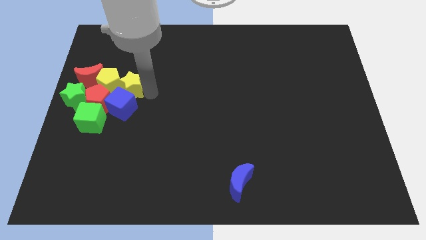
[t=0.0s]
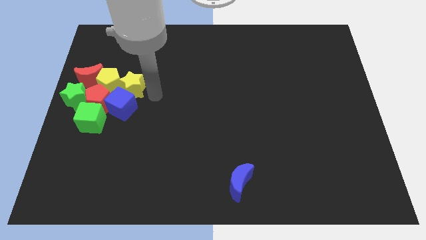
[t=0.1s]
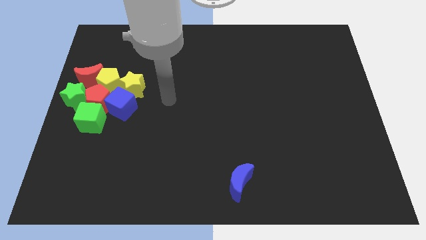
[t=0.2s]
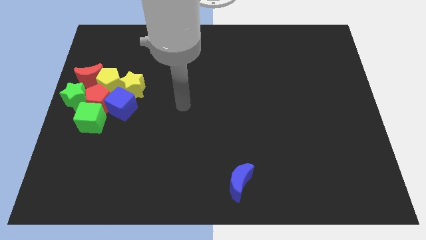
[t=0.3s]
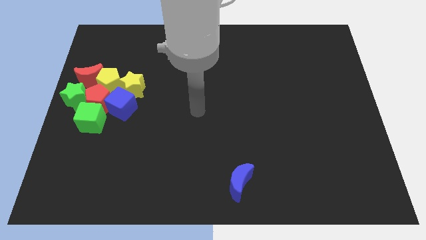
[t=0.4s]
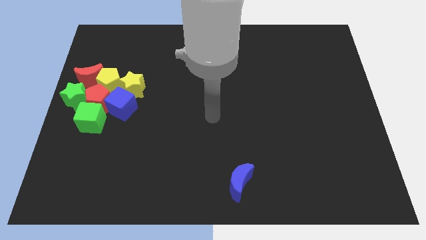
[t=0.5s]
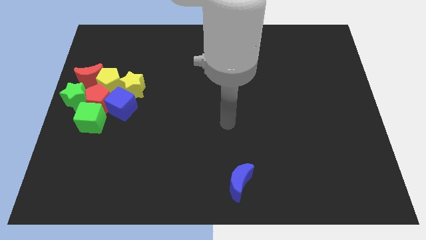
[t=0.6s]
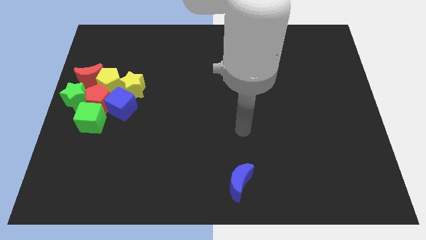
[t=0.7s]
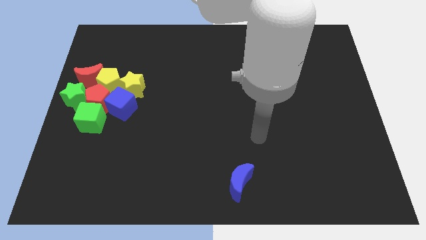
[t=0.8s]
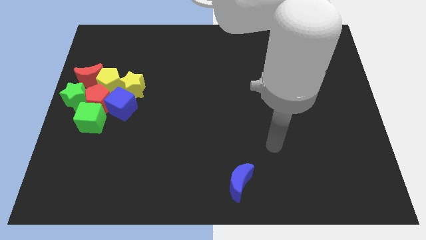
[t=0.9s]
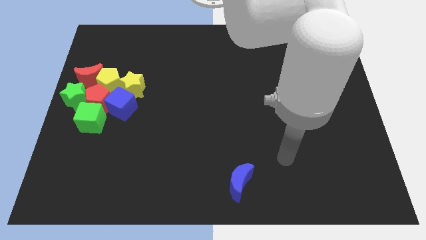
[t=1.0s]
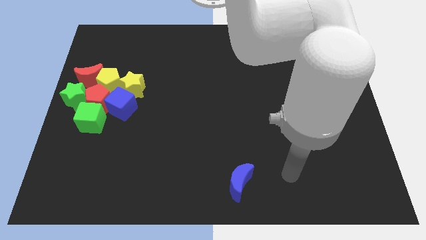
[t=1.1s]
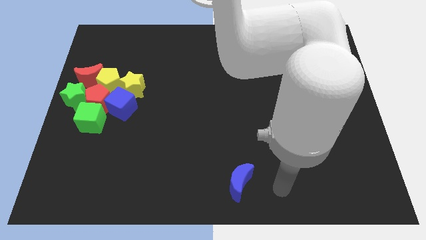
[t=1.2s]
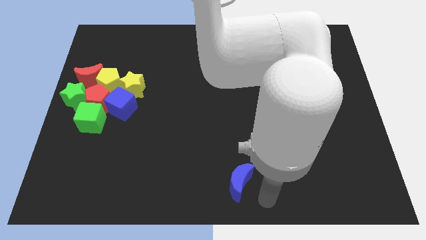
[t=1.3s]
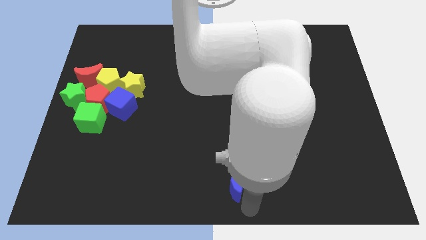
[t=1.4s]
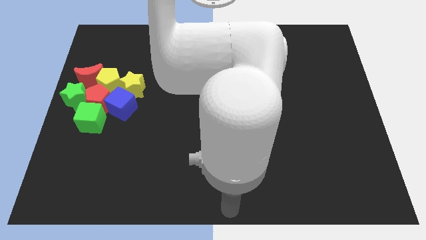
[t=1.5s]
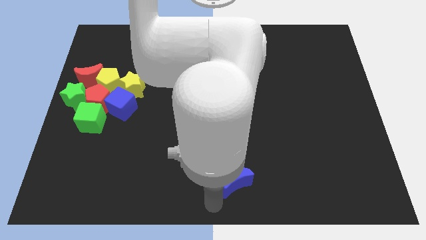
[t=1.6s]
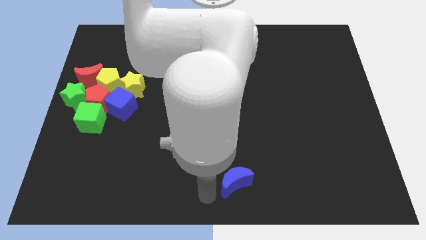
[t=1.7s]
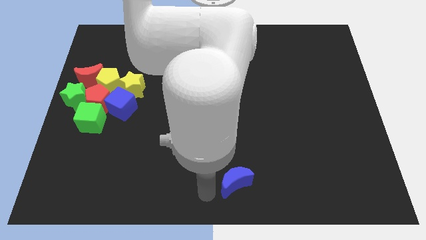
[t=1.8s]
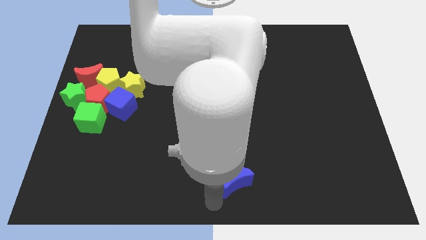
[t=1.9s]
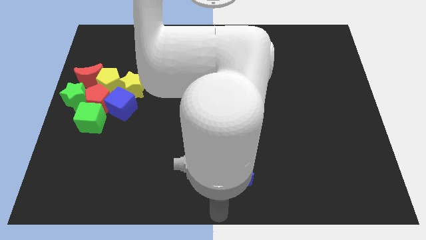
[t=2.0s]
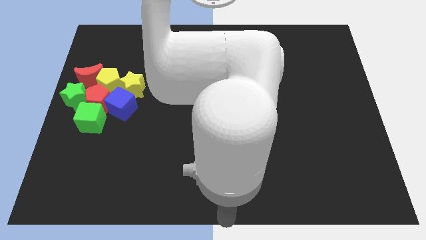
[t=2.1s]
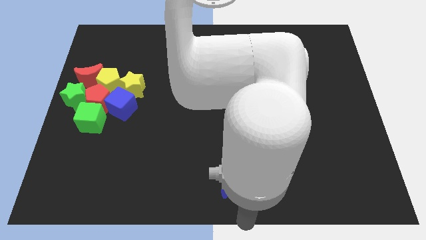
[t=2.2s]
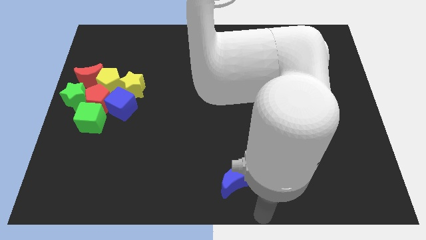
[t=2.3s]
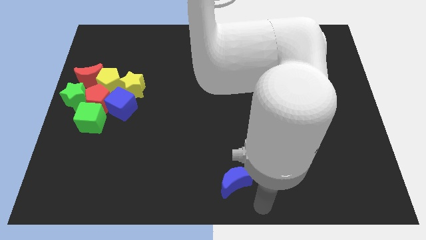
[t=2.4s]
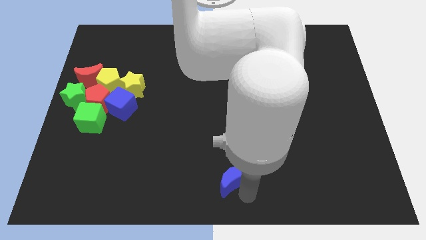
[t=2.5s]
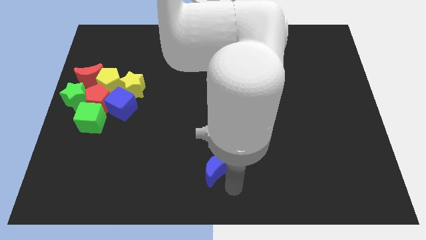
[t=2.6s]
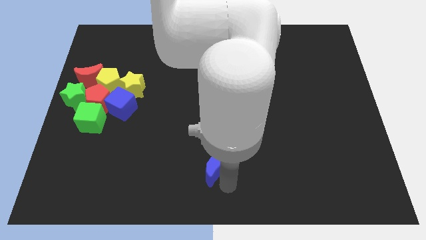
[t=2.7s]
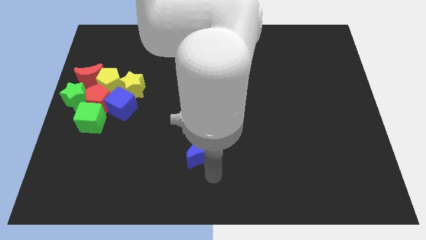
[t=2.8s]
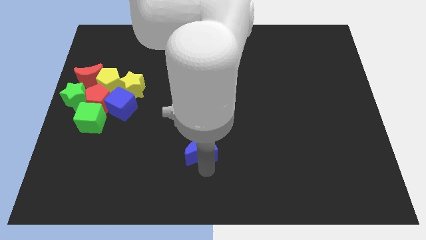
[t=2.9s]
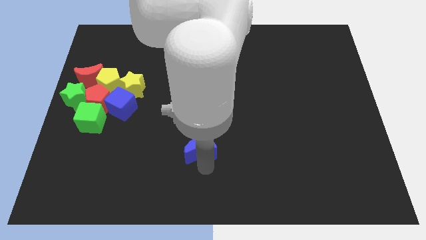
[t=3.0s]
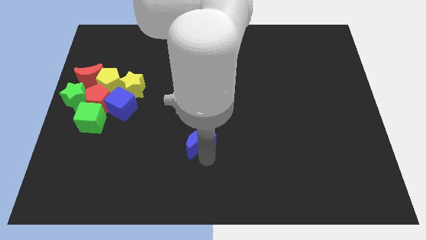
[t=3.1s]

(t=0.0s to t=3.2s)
move the blue moon towards the yellow star

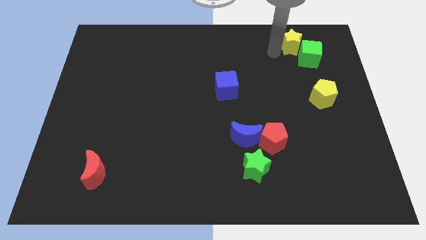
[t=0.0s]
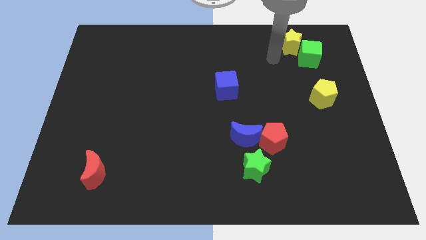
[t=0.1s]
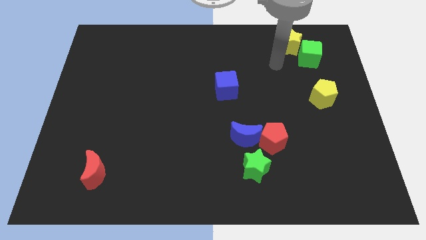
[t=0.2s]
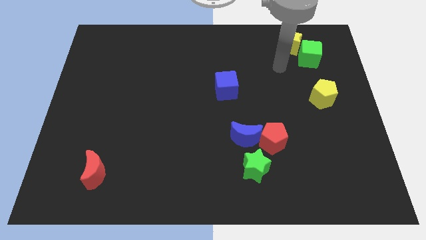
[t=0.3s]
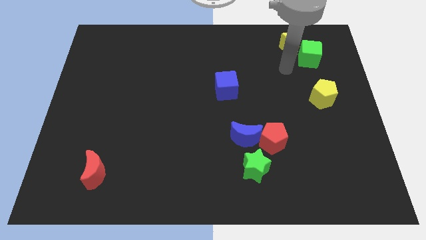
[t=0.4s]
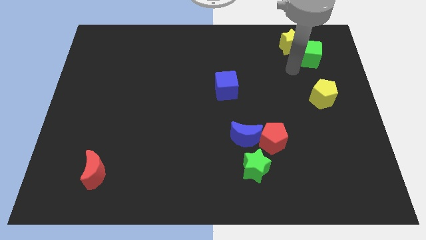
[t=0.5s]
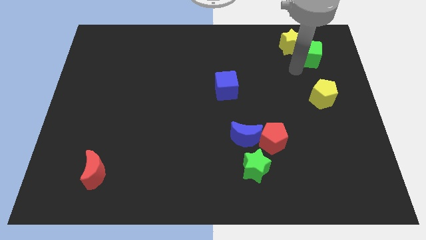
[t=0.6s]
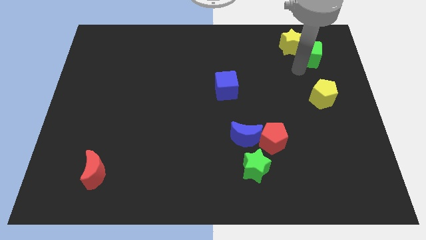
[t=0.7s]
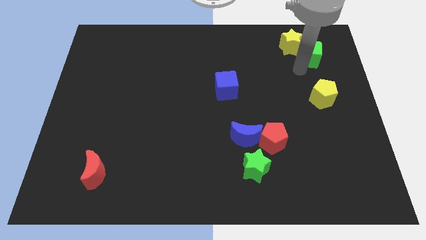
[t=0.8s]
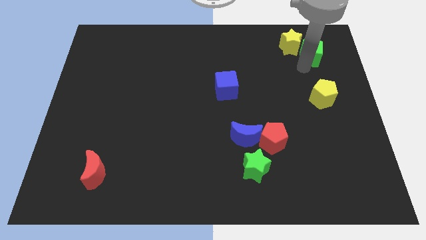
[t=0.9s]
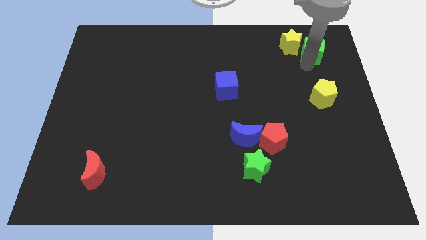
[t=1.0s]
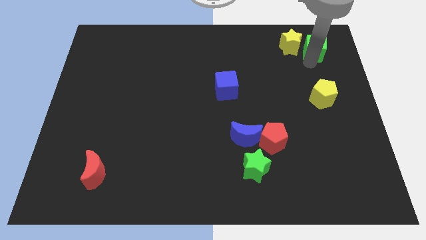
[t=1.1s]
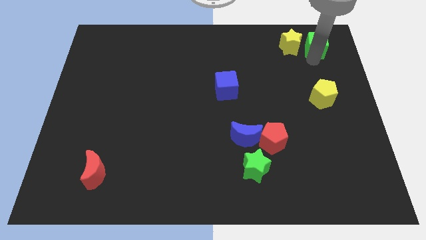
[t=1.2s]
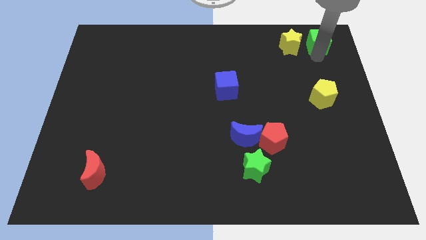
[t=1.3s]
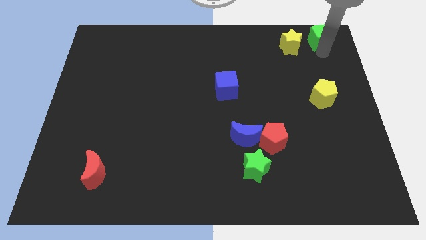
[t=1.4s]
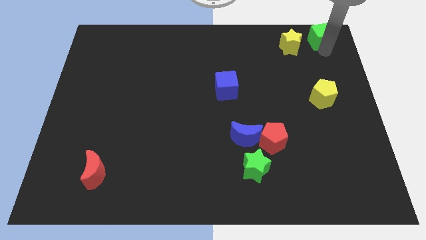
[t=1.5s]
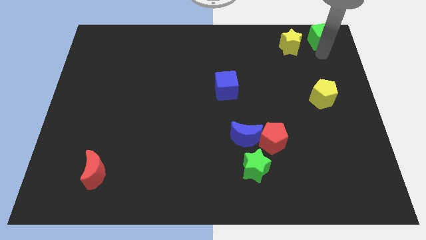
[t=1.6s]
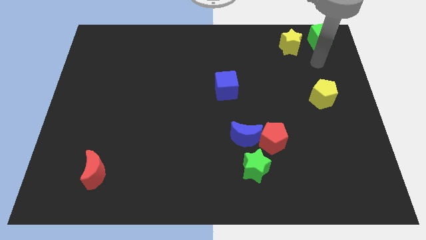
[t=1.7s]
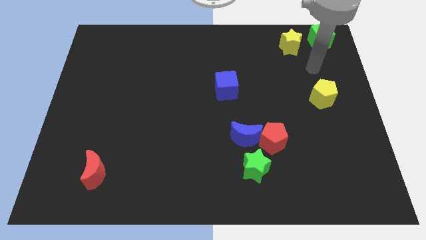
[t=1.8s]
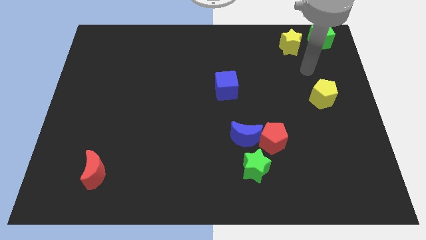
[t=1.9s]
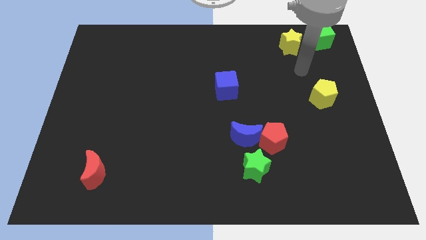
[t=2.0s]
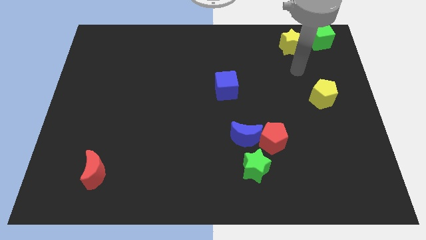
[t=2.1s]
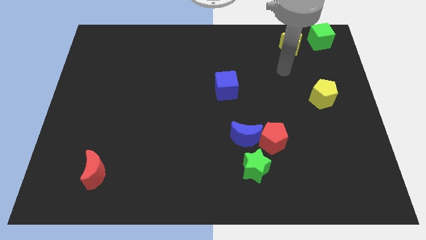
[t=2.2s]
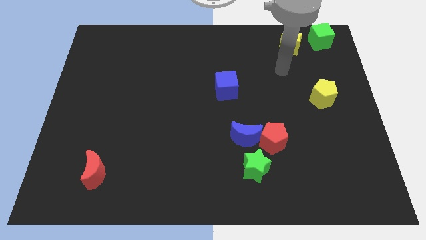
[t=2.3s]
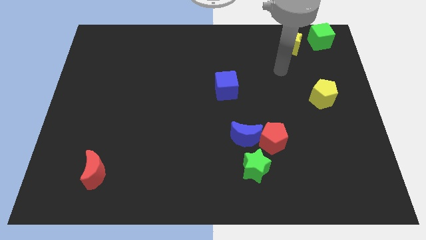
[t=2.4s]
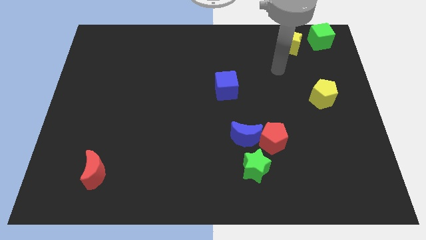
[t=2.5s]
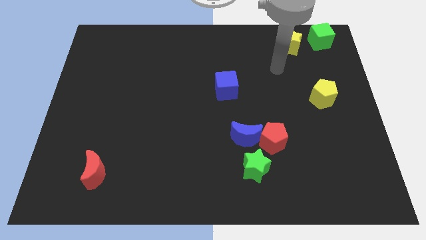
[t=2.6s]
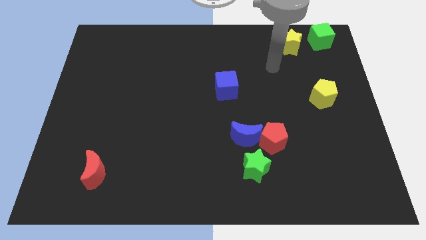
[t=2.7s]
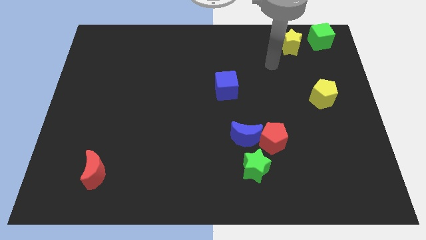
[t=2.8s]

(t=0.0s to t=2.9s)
push green cube towards top right corner of the board

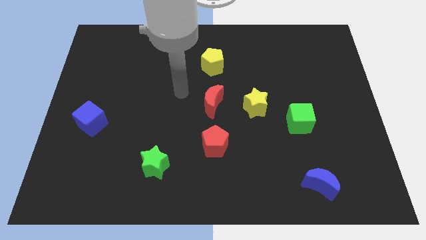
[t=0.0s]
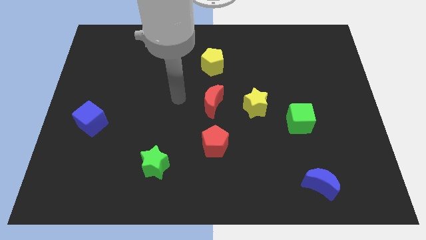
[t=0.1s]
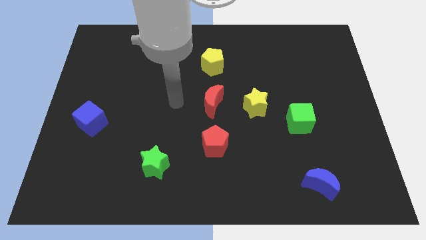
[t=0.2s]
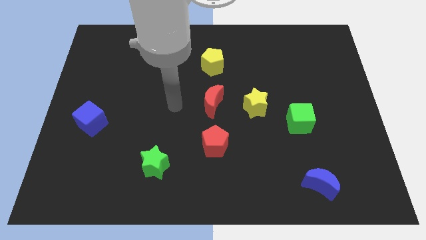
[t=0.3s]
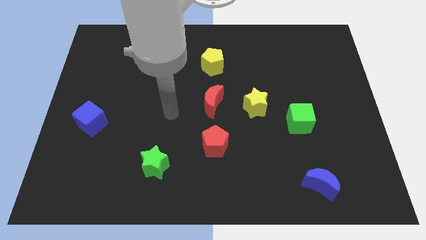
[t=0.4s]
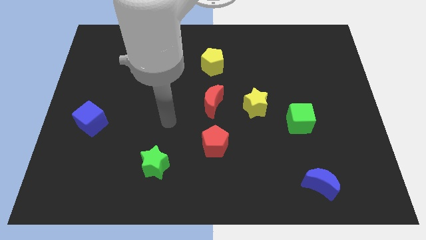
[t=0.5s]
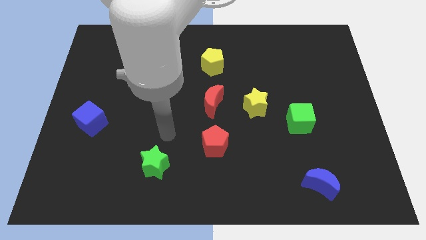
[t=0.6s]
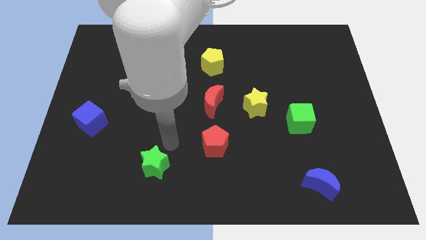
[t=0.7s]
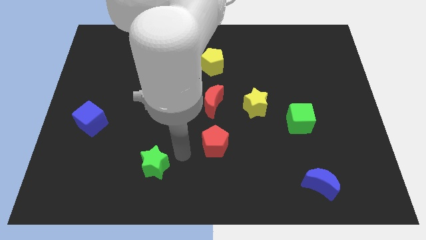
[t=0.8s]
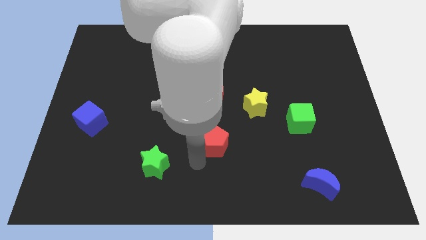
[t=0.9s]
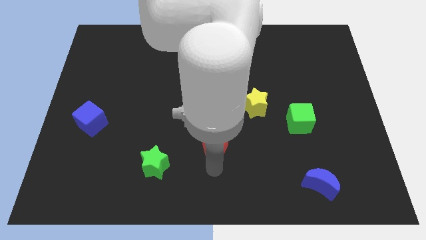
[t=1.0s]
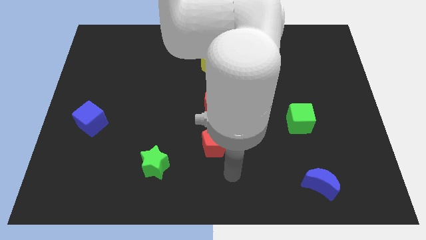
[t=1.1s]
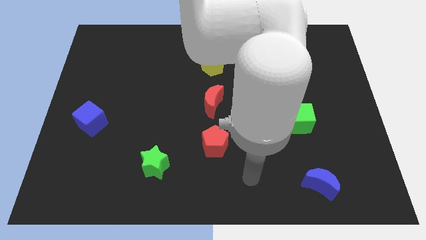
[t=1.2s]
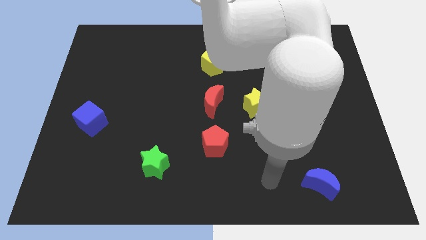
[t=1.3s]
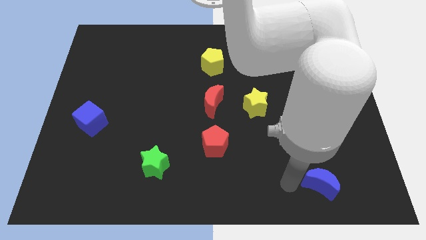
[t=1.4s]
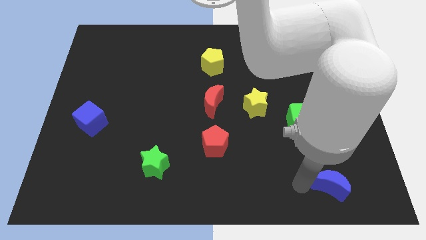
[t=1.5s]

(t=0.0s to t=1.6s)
place the arm left to the blue moon

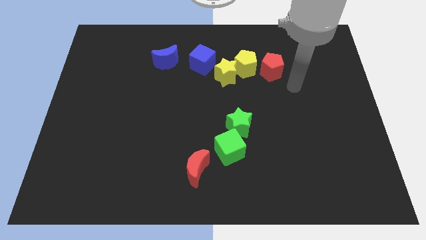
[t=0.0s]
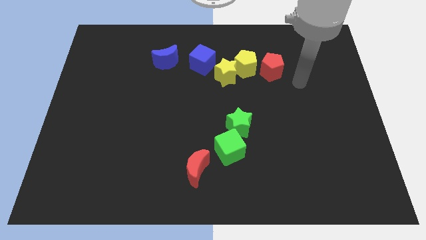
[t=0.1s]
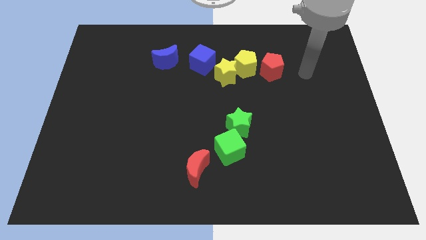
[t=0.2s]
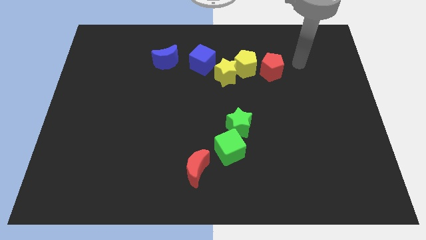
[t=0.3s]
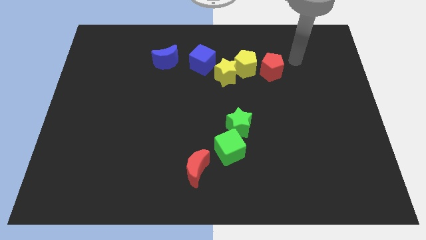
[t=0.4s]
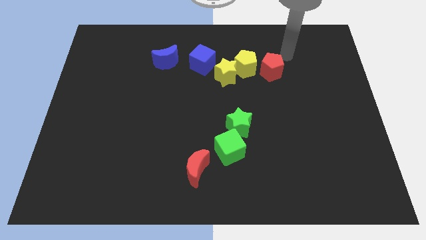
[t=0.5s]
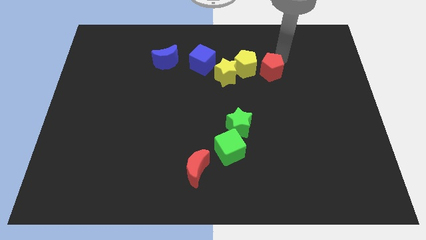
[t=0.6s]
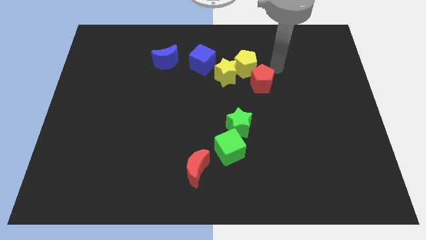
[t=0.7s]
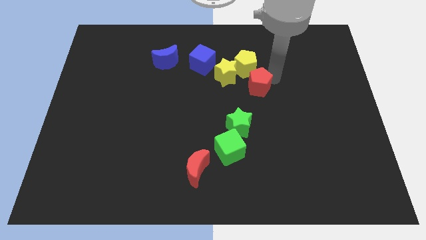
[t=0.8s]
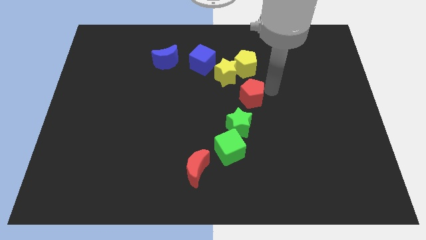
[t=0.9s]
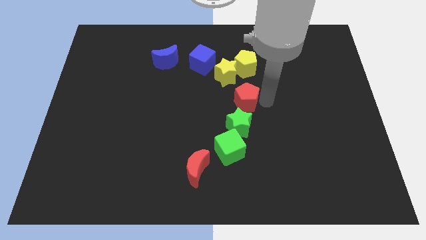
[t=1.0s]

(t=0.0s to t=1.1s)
push the red pentagon towards the green star

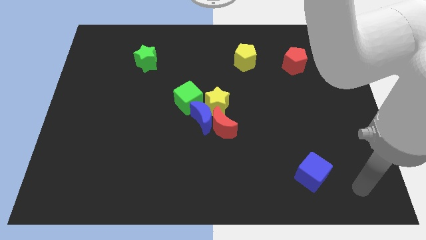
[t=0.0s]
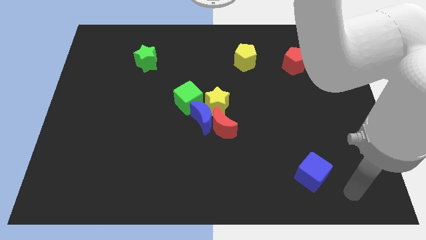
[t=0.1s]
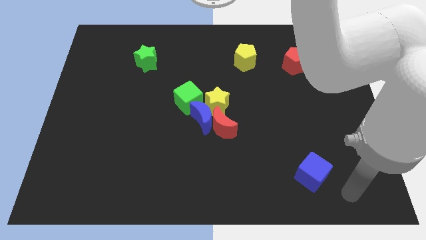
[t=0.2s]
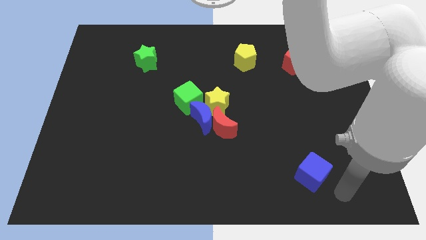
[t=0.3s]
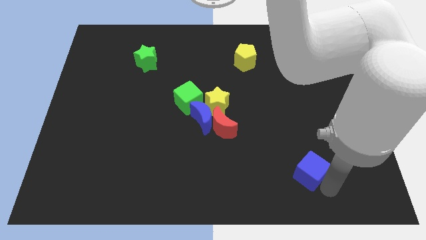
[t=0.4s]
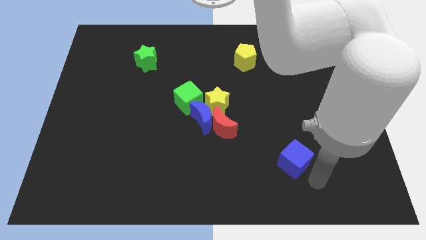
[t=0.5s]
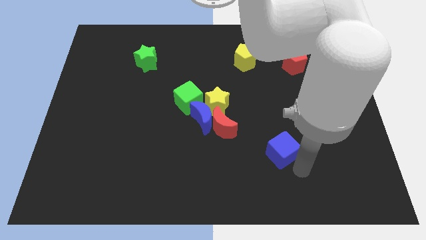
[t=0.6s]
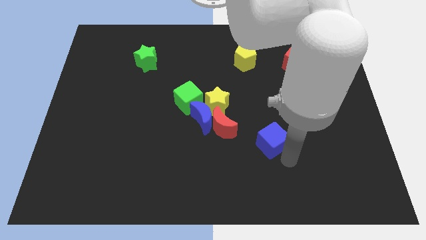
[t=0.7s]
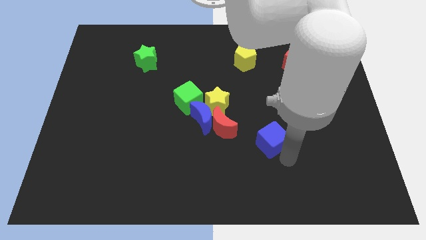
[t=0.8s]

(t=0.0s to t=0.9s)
move the blue cube diagonally bottom right to the yellow star
